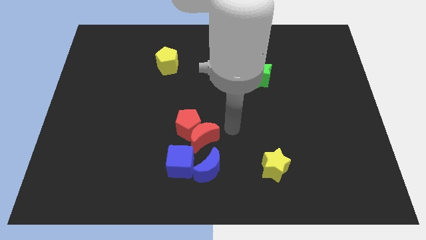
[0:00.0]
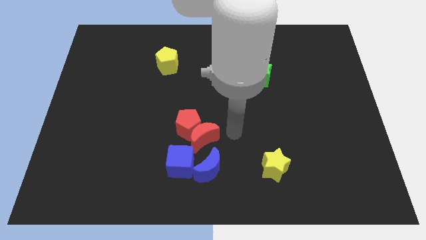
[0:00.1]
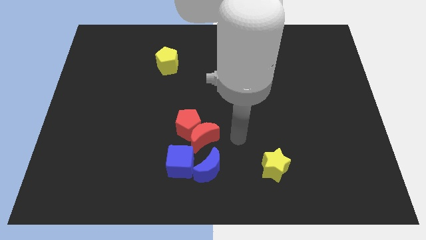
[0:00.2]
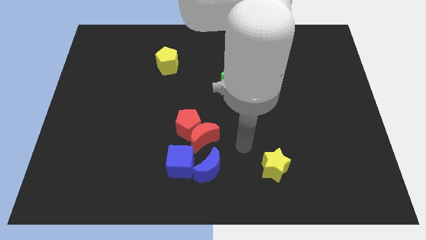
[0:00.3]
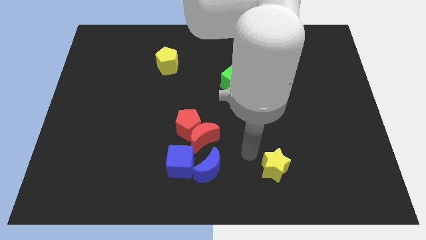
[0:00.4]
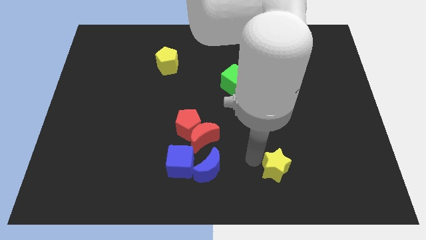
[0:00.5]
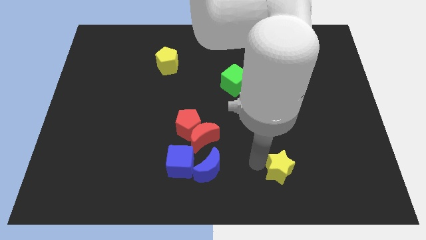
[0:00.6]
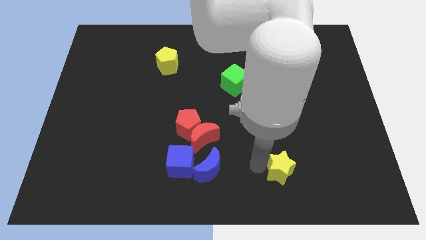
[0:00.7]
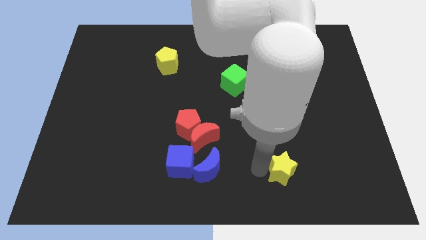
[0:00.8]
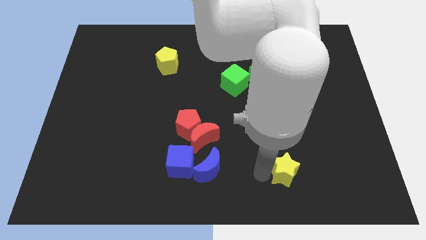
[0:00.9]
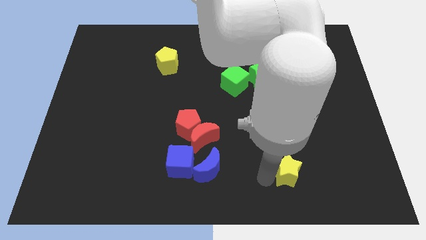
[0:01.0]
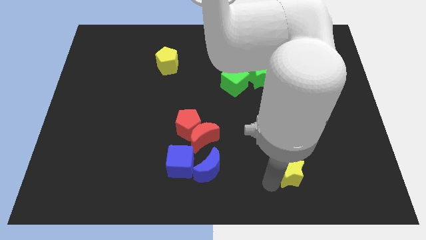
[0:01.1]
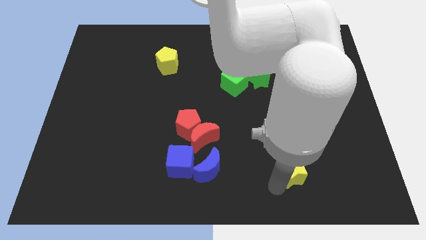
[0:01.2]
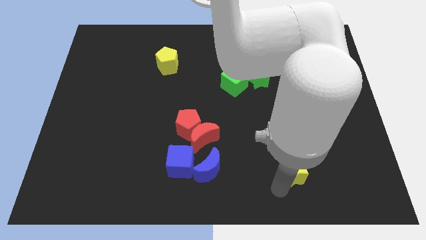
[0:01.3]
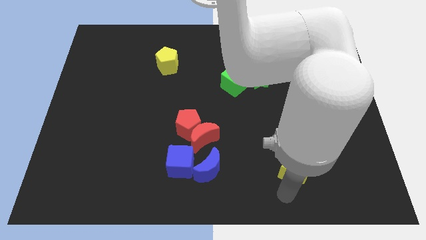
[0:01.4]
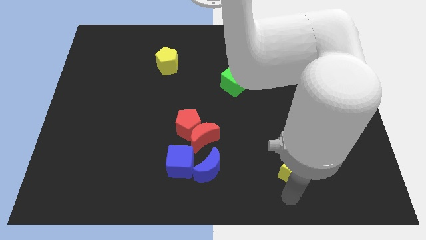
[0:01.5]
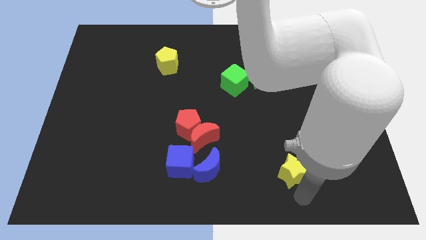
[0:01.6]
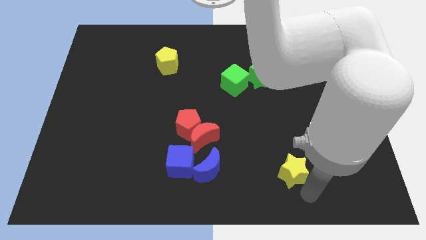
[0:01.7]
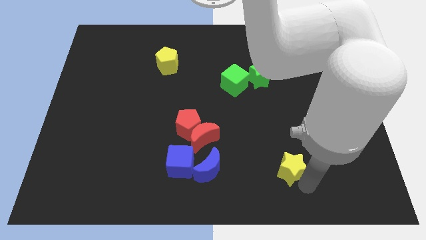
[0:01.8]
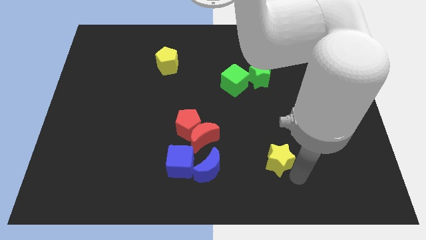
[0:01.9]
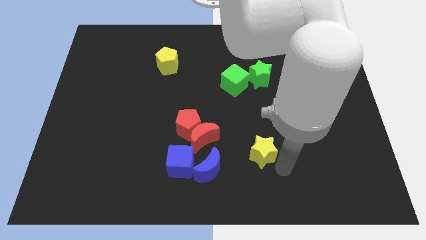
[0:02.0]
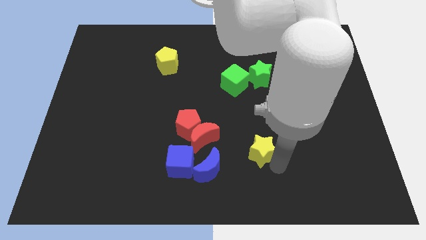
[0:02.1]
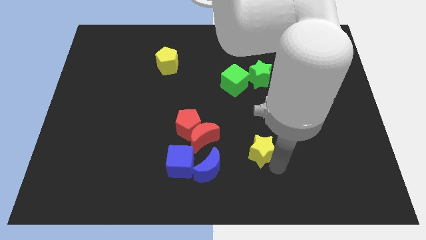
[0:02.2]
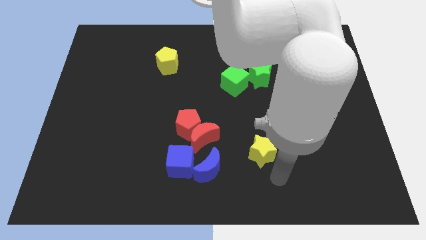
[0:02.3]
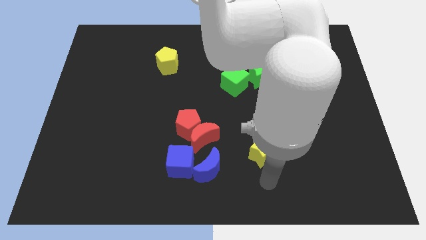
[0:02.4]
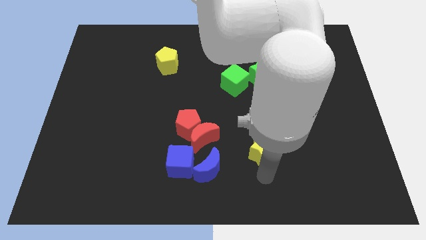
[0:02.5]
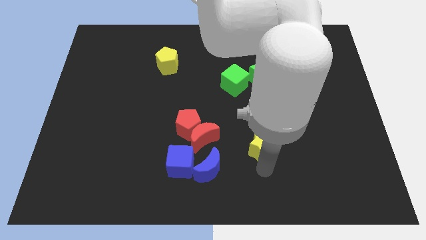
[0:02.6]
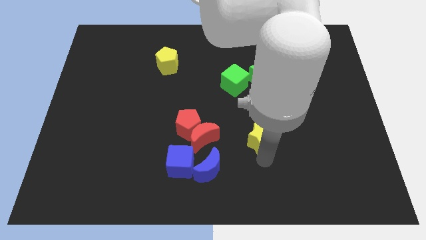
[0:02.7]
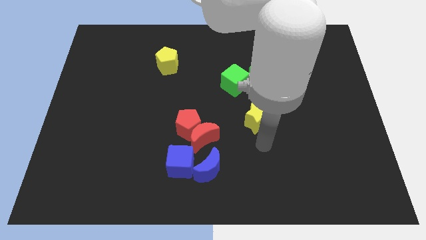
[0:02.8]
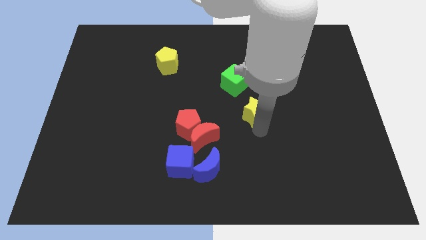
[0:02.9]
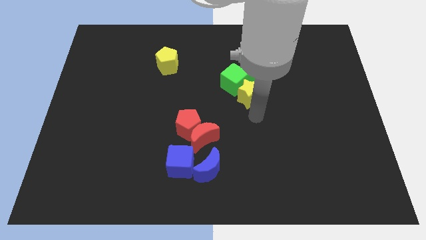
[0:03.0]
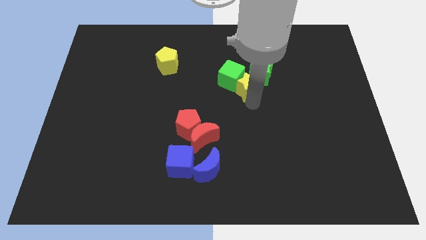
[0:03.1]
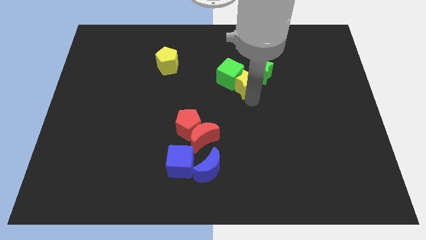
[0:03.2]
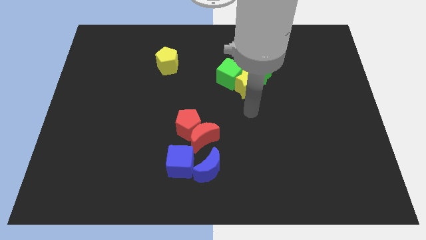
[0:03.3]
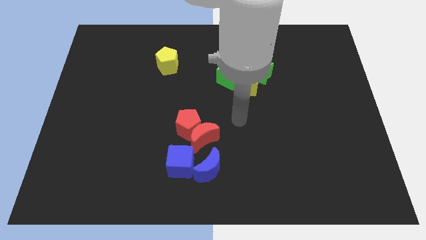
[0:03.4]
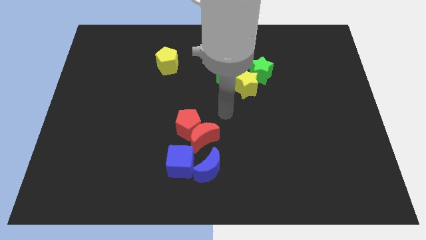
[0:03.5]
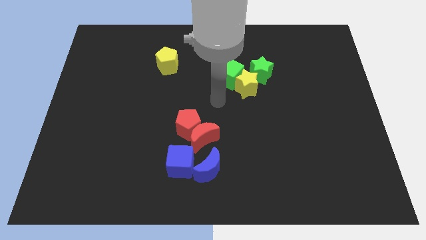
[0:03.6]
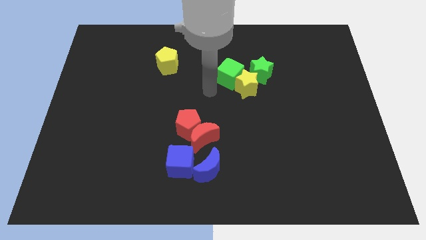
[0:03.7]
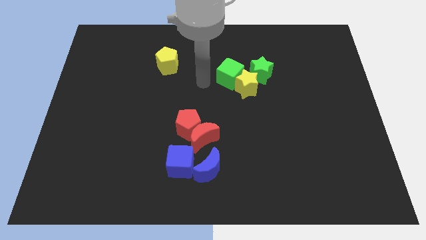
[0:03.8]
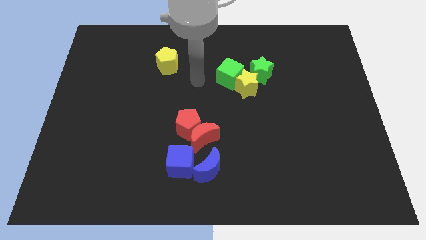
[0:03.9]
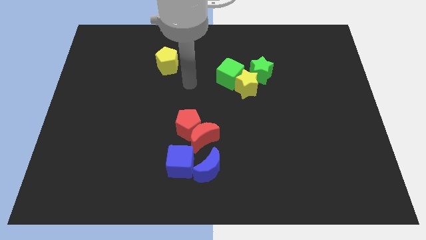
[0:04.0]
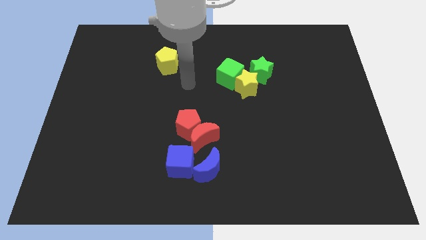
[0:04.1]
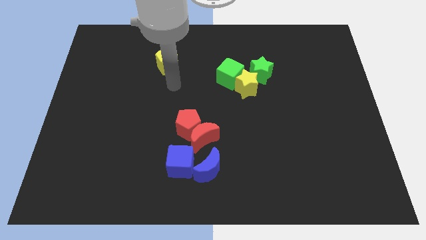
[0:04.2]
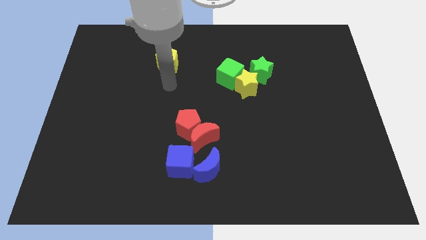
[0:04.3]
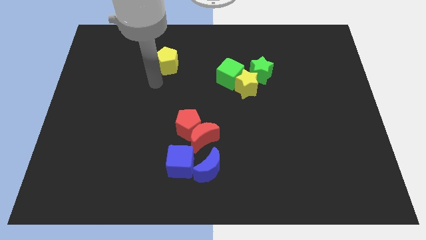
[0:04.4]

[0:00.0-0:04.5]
push the yellow star into the green cube and green star

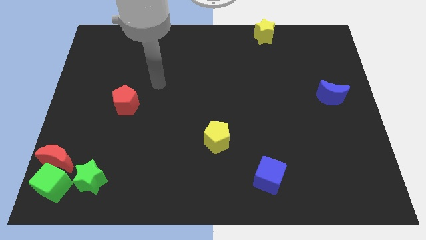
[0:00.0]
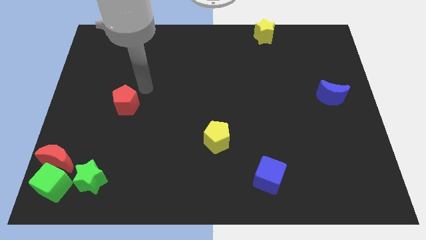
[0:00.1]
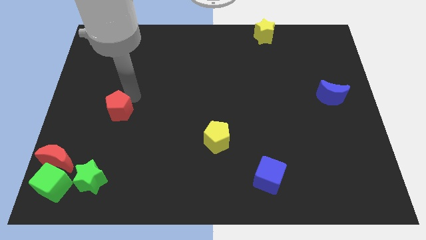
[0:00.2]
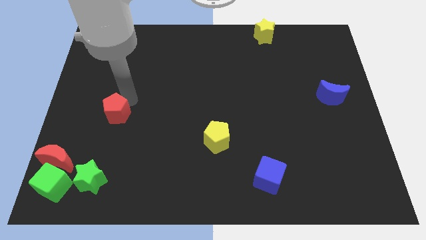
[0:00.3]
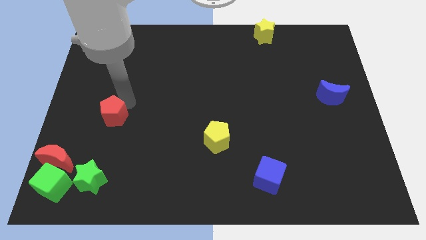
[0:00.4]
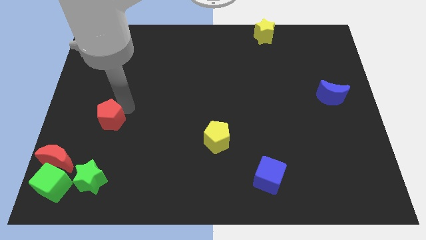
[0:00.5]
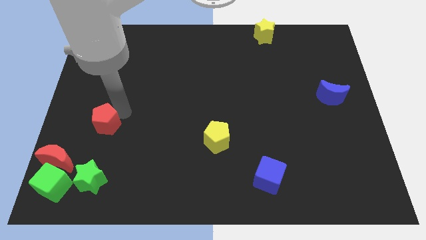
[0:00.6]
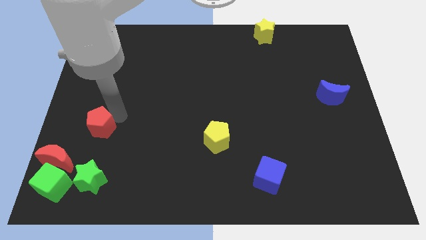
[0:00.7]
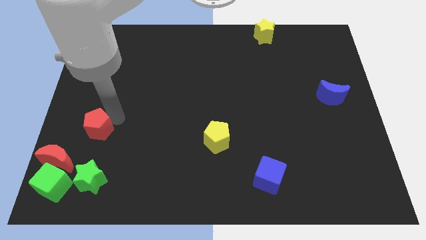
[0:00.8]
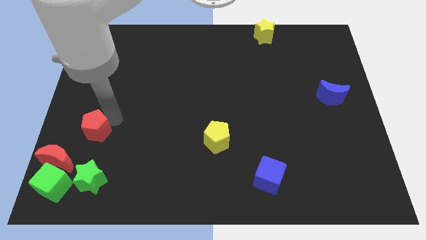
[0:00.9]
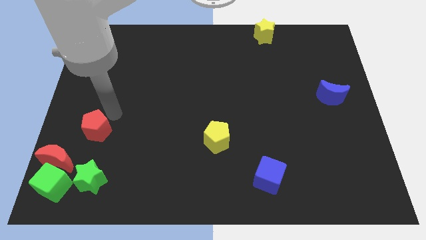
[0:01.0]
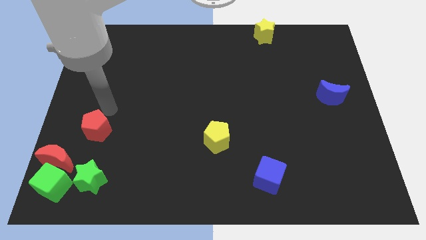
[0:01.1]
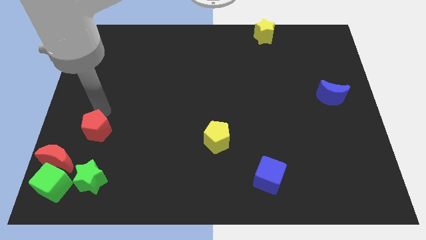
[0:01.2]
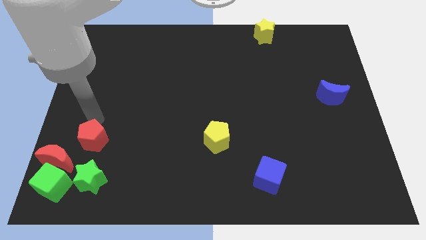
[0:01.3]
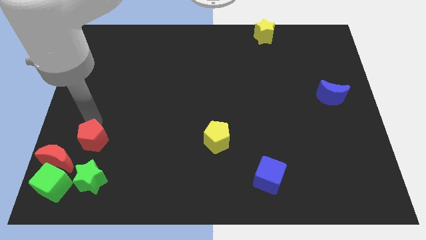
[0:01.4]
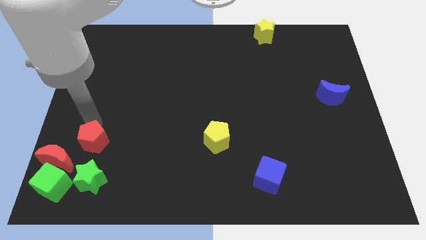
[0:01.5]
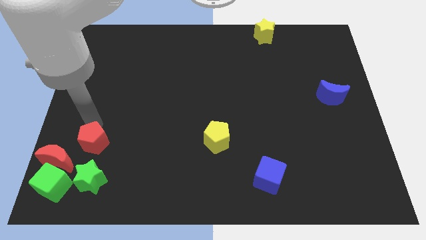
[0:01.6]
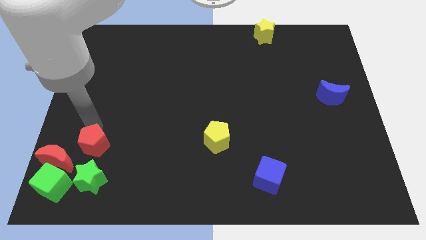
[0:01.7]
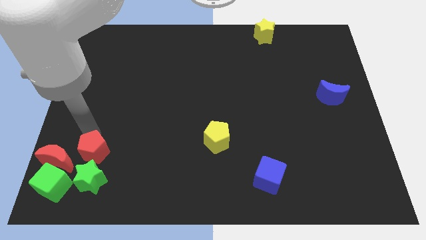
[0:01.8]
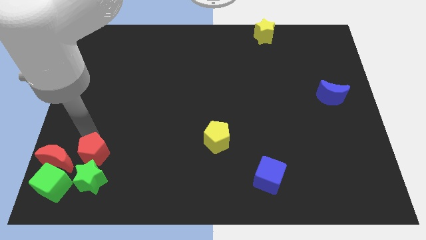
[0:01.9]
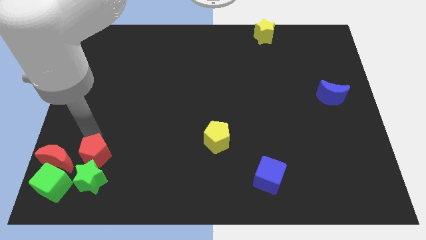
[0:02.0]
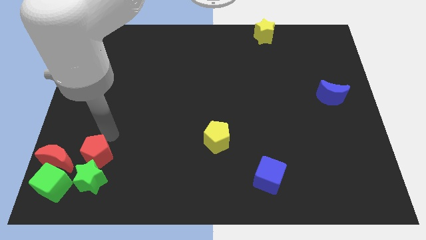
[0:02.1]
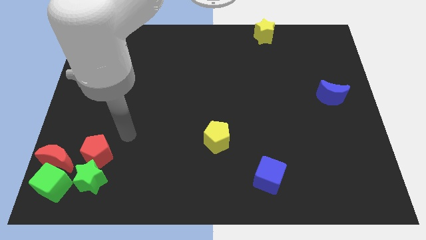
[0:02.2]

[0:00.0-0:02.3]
place the red pentagon above the green star

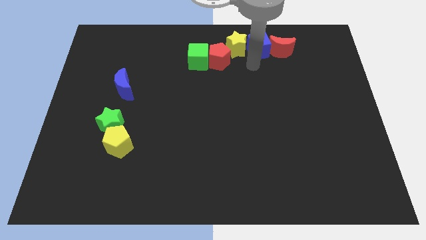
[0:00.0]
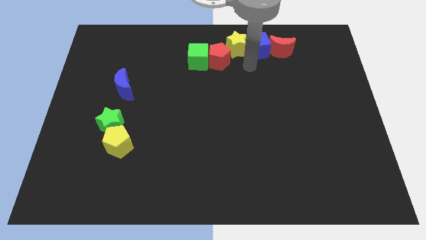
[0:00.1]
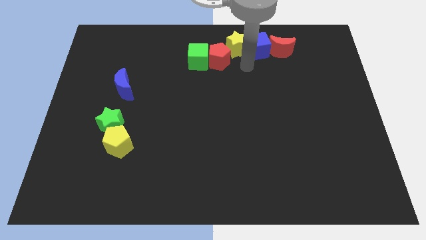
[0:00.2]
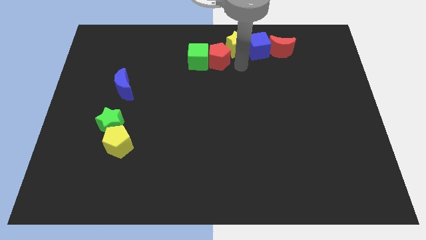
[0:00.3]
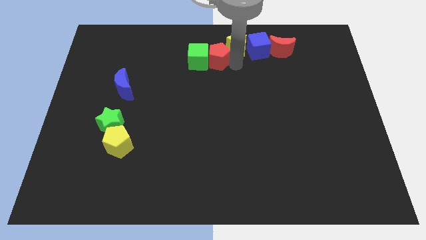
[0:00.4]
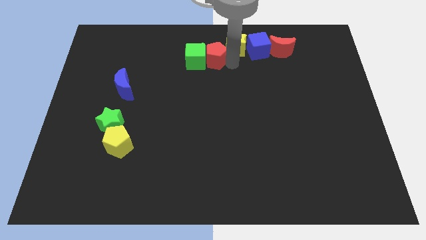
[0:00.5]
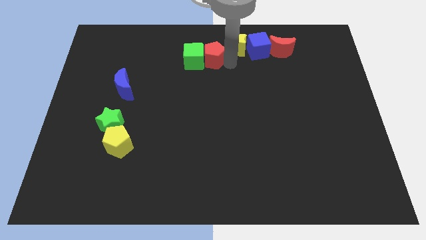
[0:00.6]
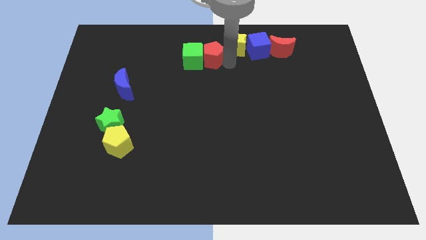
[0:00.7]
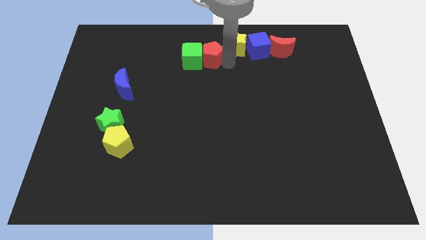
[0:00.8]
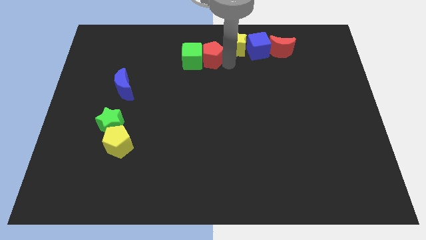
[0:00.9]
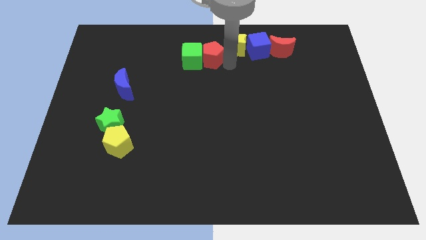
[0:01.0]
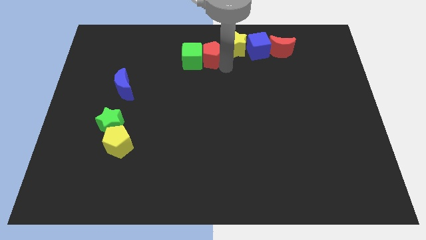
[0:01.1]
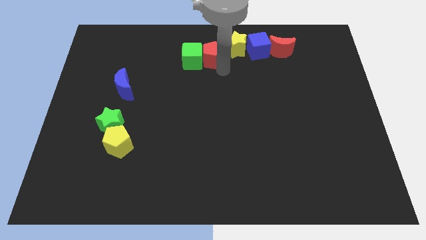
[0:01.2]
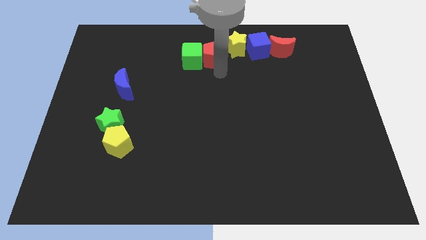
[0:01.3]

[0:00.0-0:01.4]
slide the red pentagon and green cube towards left

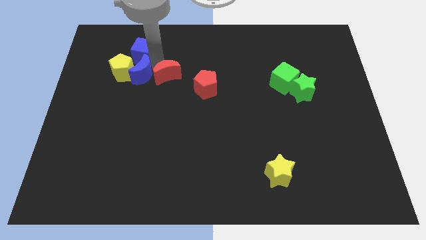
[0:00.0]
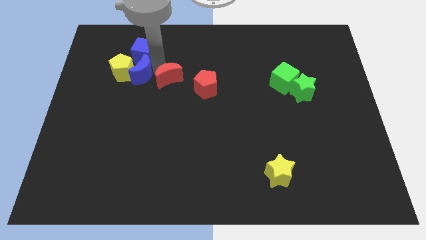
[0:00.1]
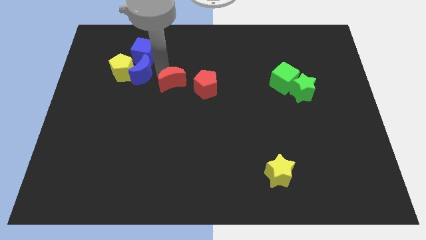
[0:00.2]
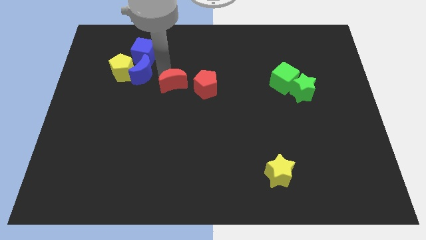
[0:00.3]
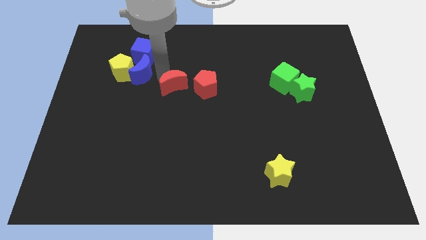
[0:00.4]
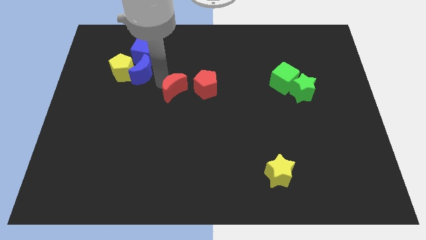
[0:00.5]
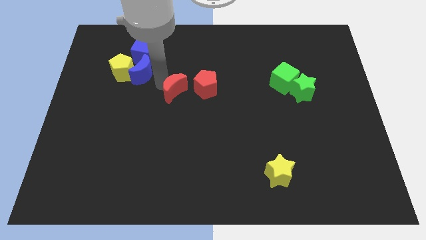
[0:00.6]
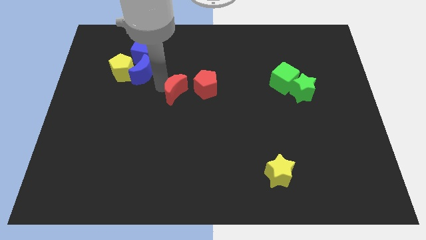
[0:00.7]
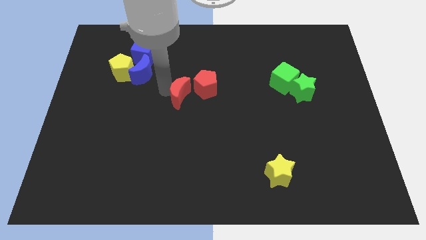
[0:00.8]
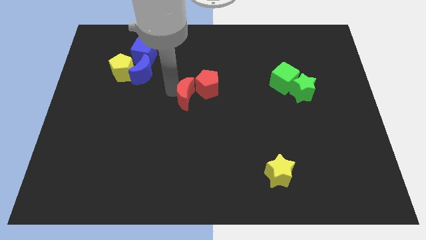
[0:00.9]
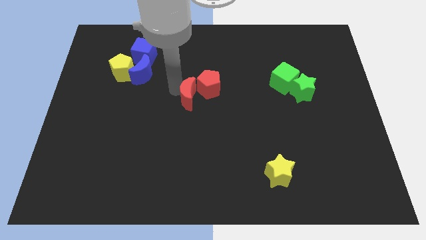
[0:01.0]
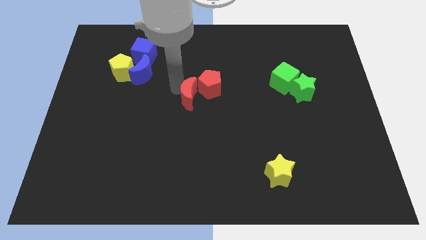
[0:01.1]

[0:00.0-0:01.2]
push the red crescent left side of the red pentagon
